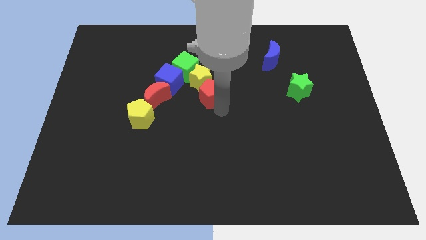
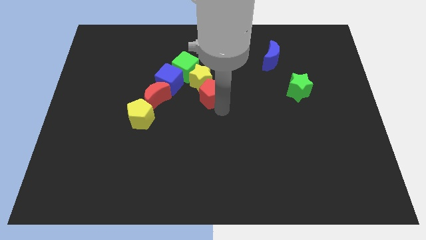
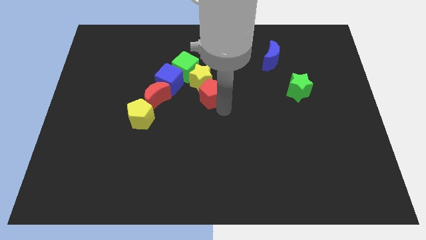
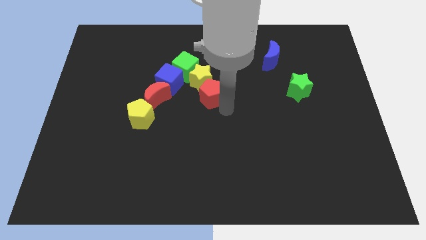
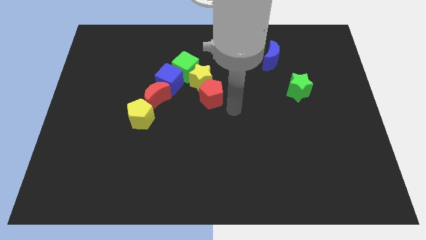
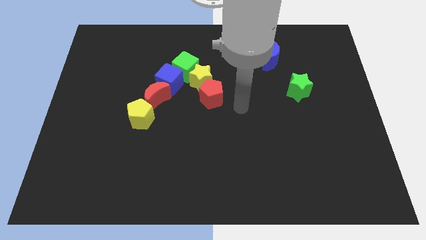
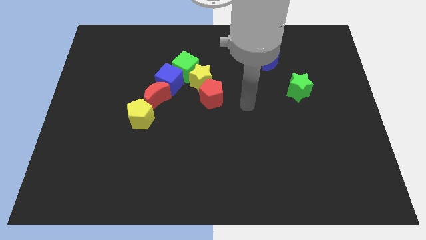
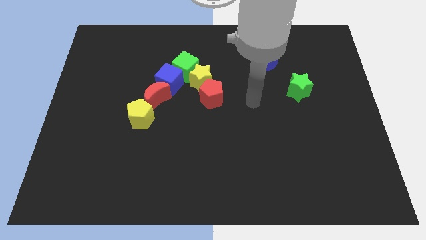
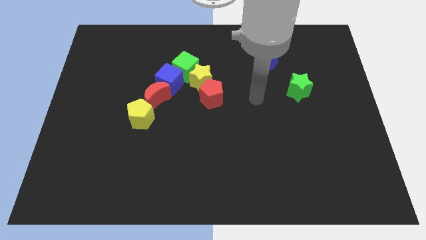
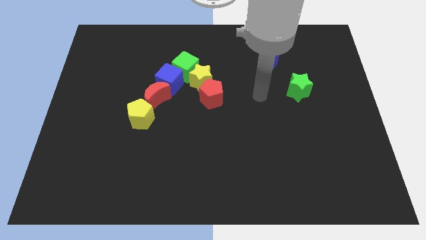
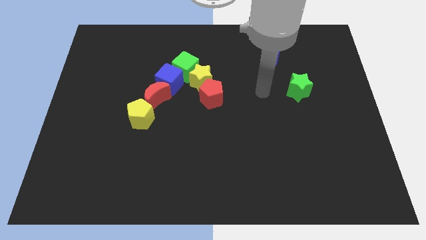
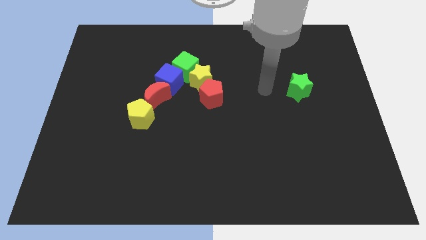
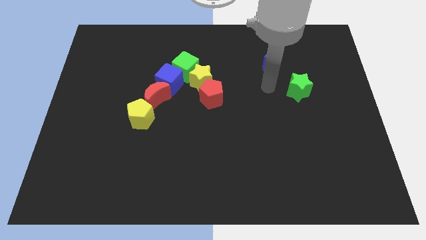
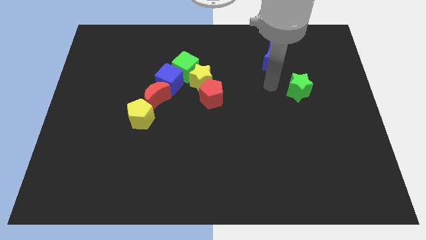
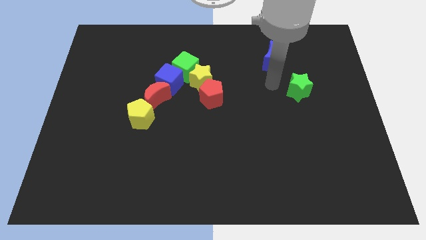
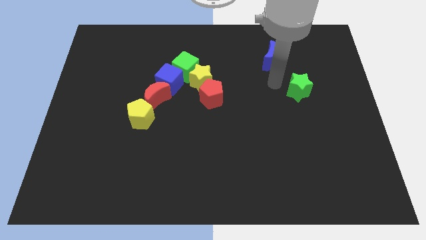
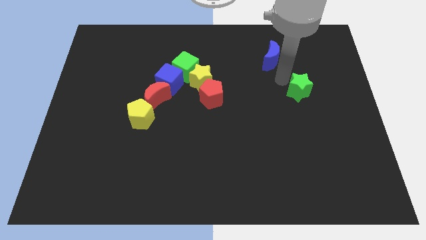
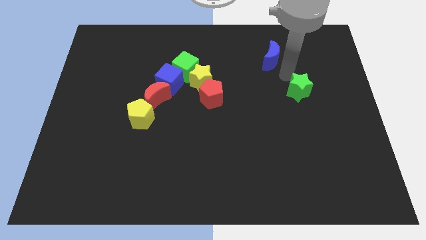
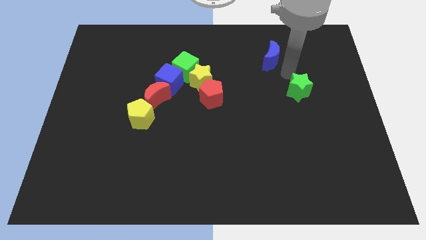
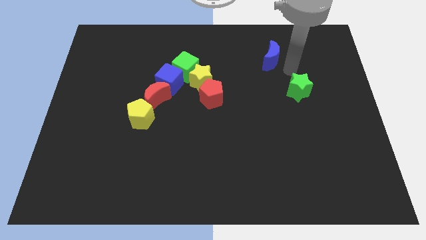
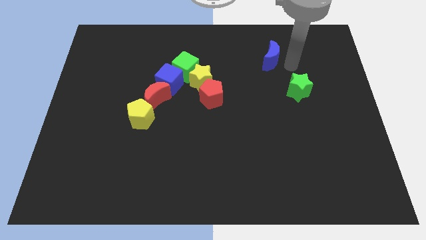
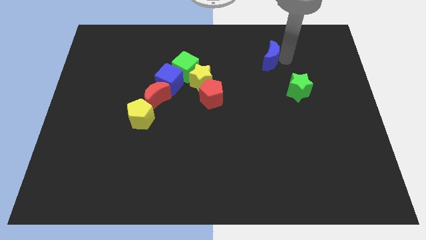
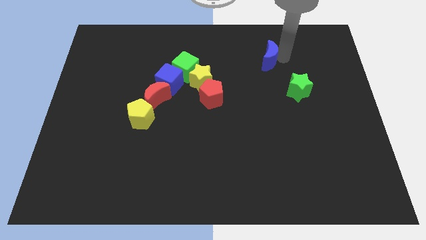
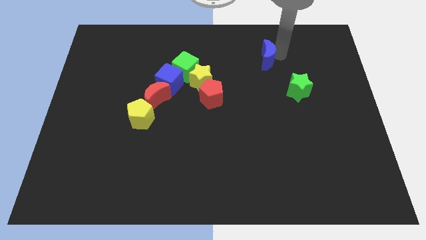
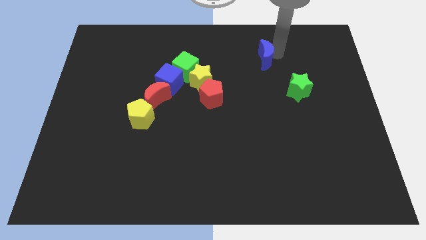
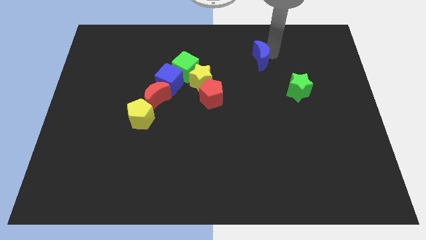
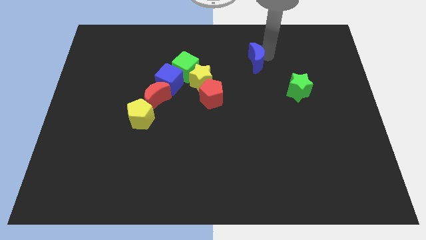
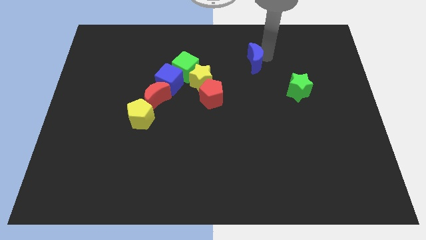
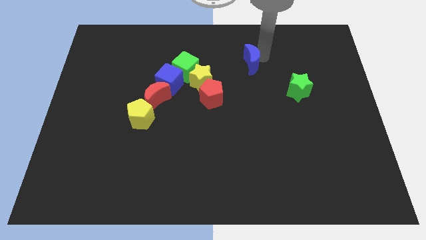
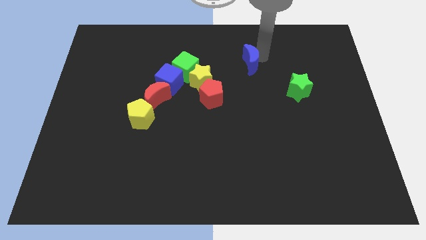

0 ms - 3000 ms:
move the arm right to the blue crescent

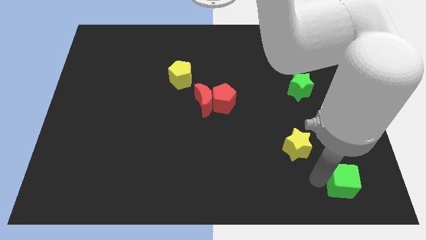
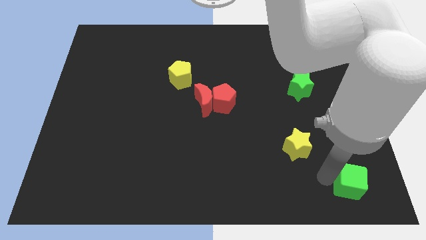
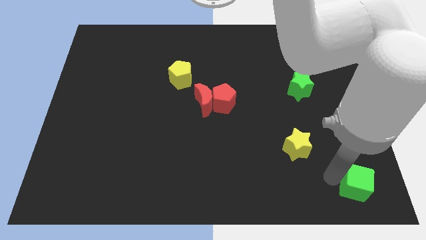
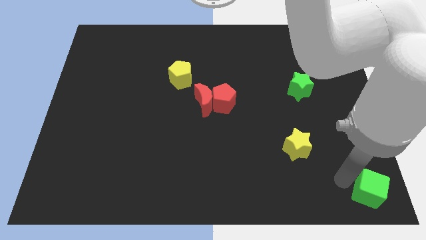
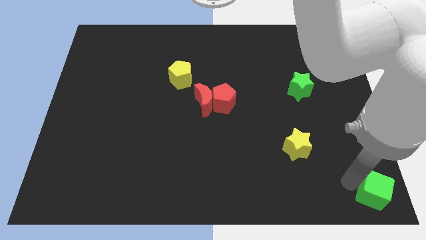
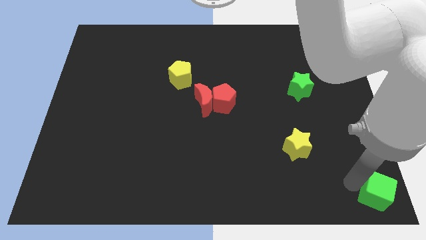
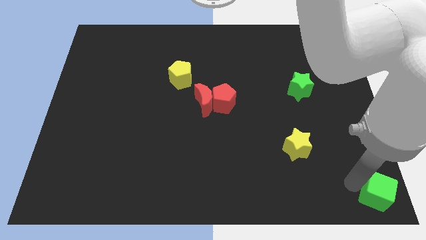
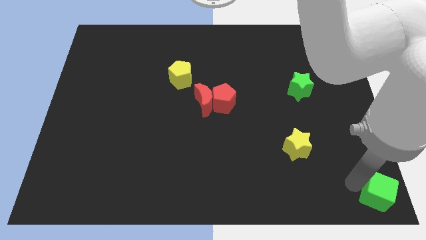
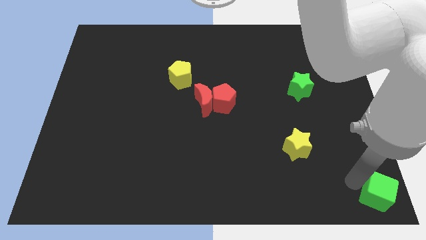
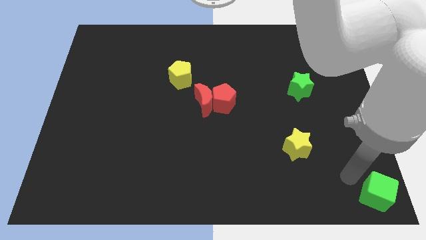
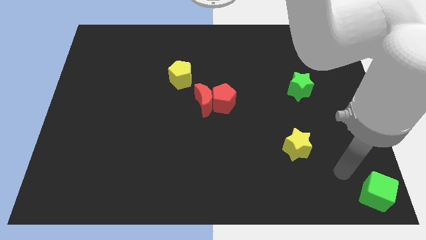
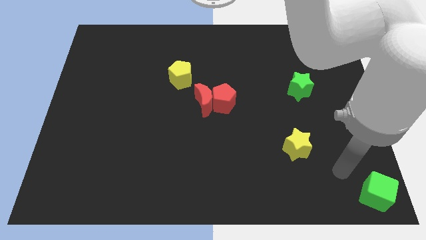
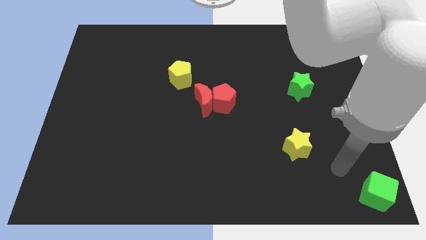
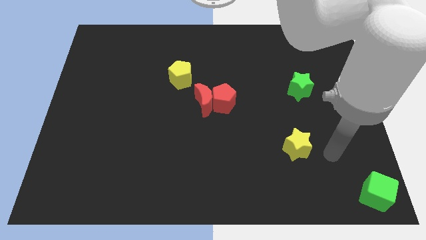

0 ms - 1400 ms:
push the green cube to the bottom right of the board

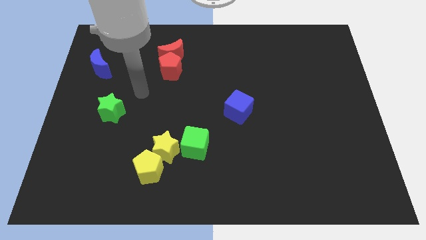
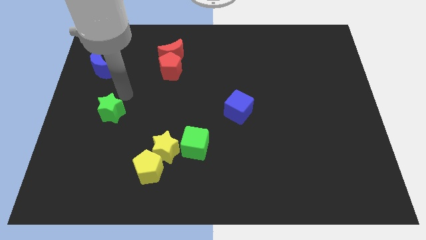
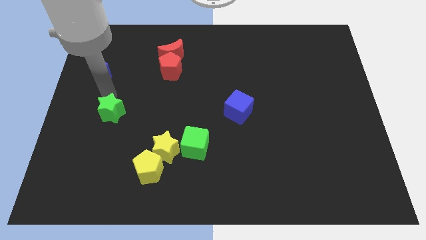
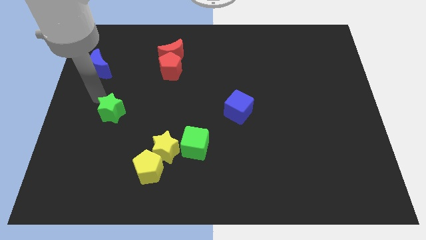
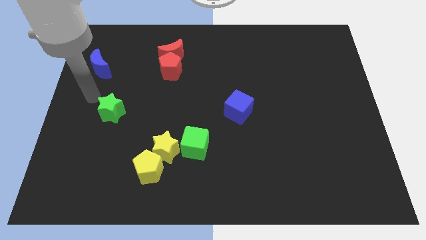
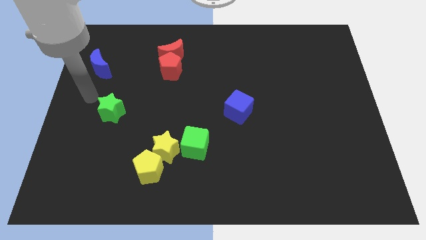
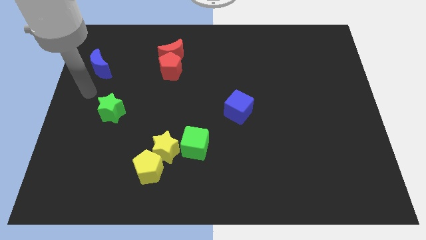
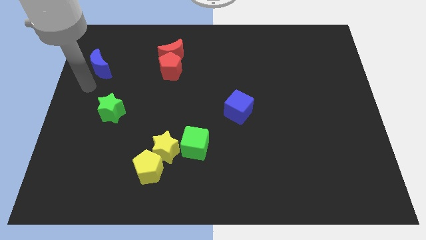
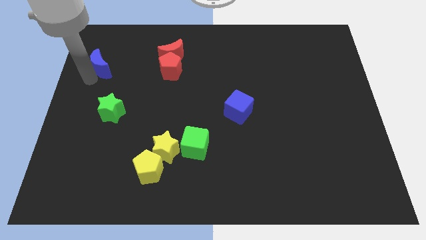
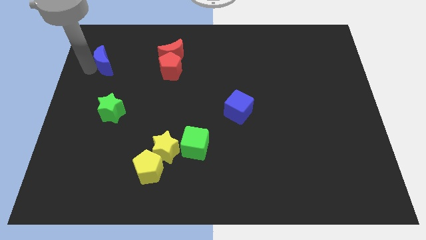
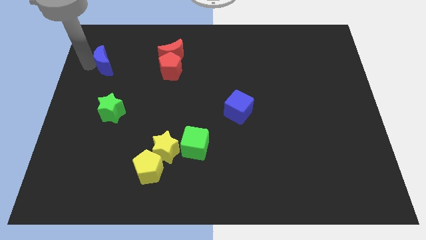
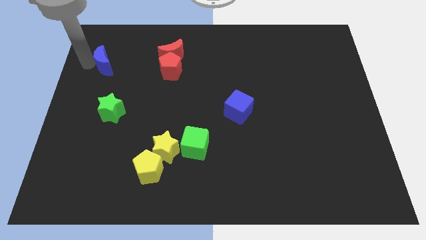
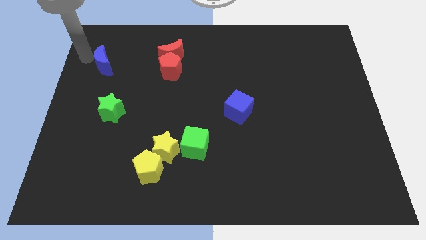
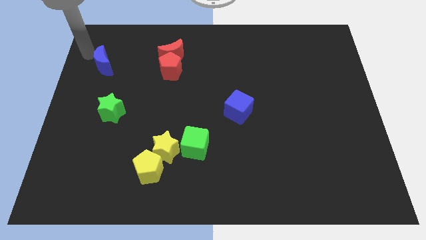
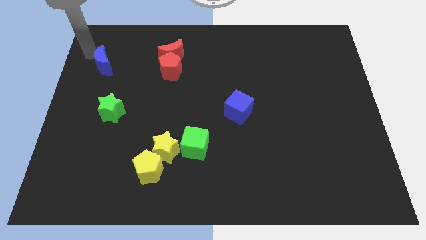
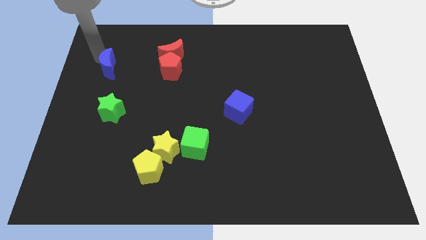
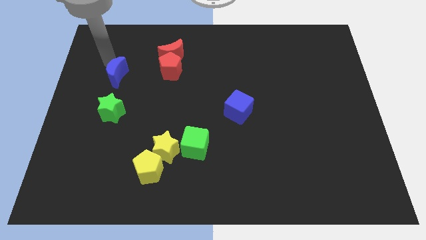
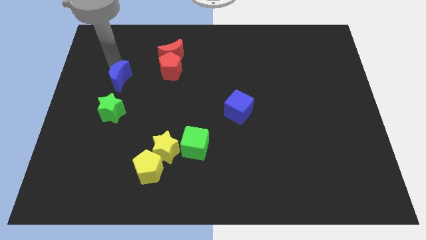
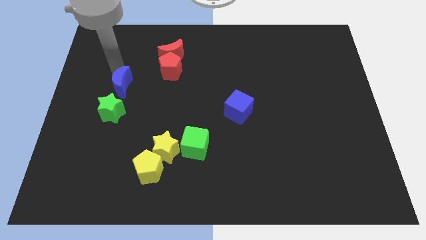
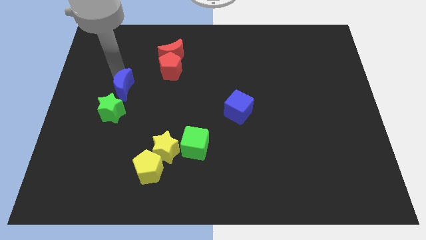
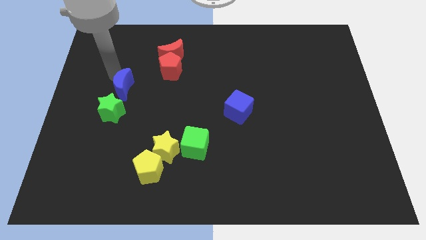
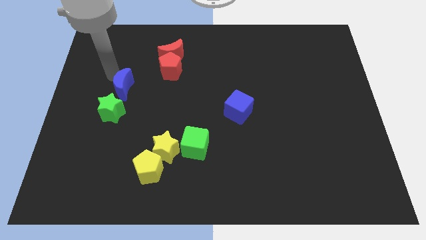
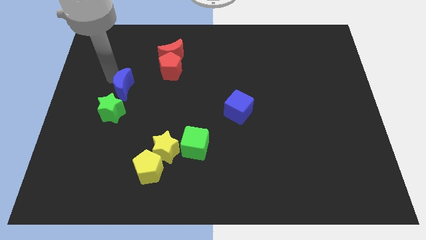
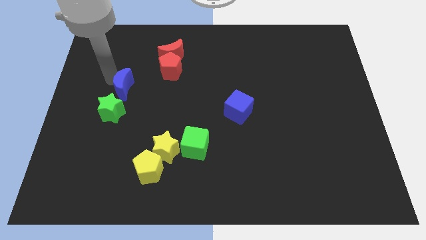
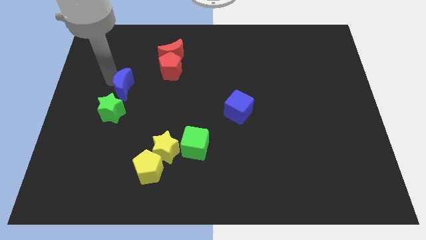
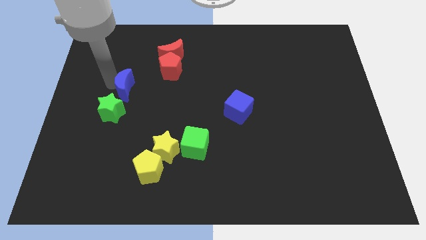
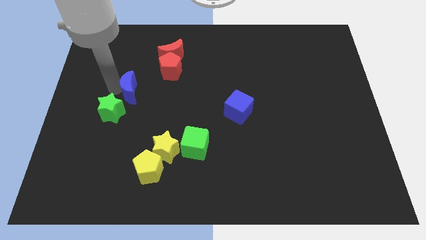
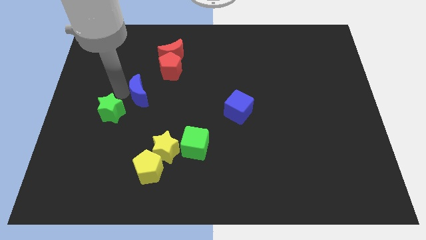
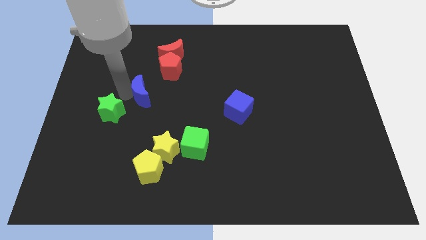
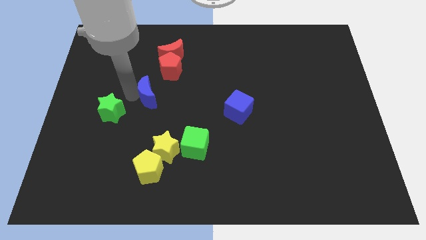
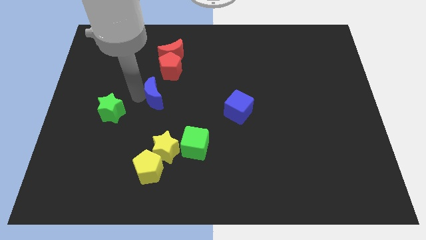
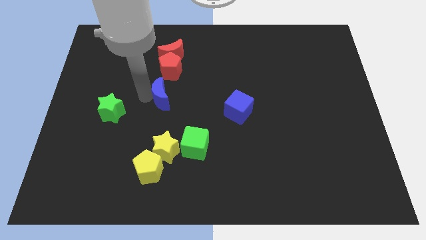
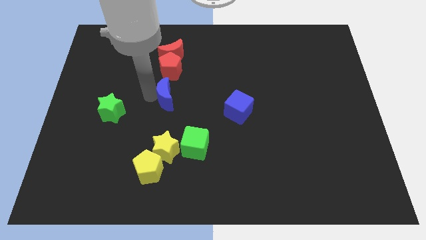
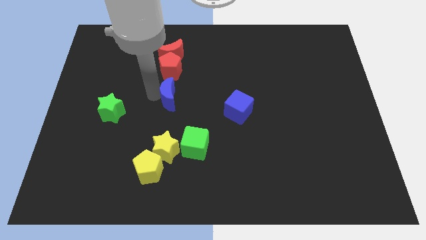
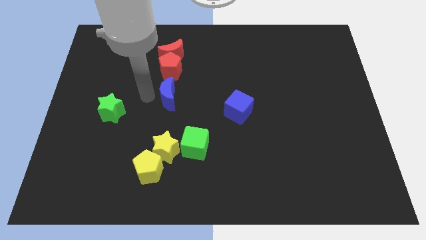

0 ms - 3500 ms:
push the blue moon to the bottom side of the red pentagon

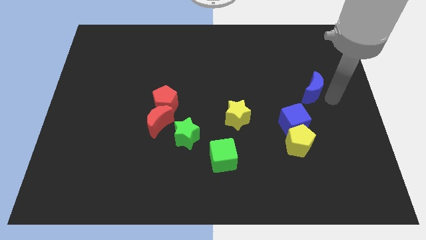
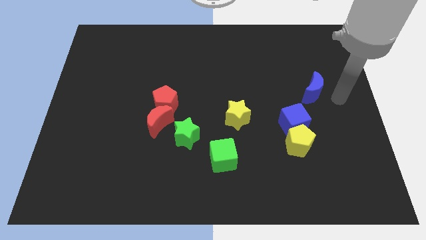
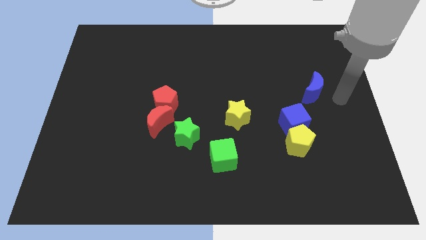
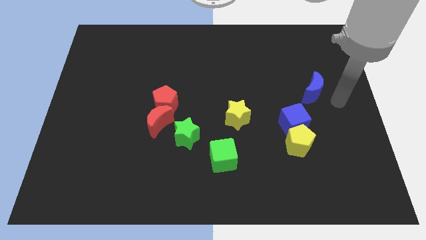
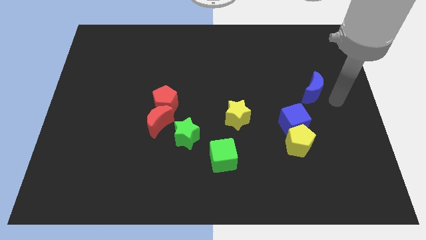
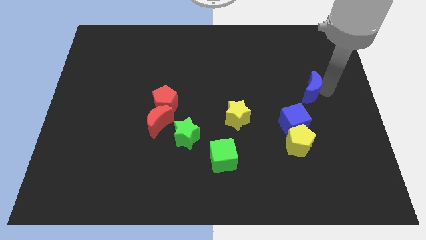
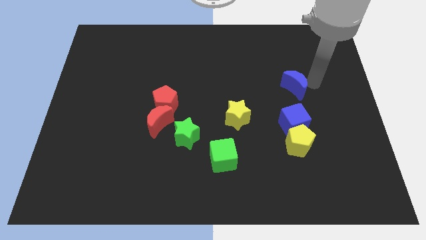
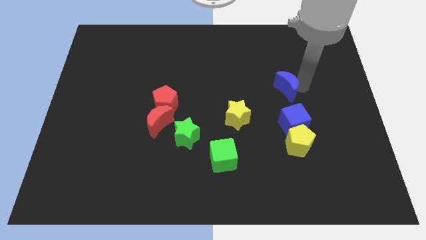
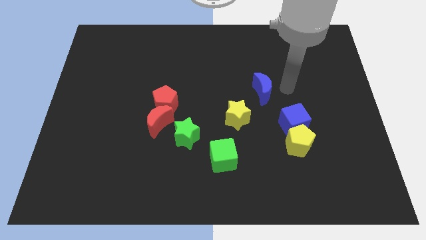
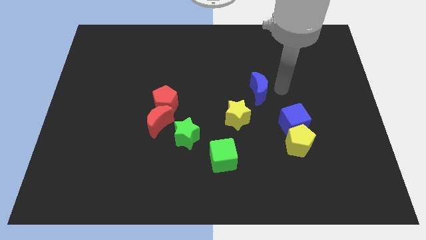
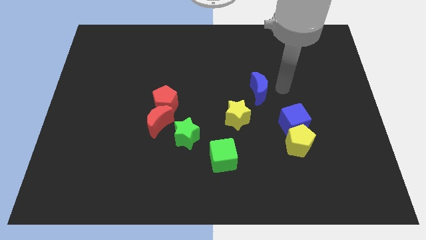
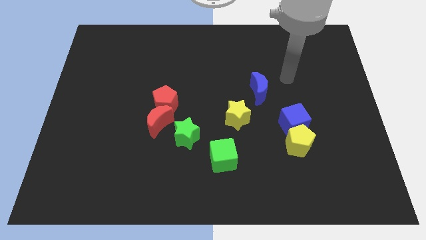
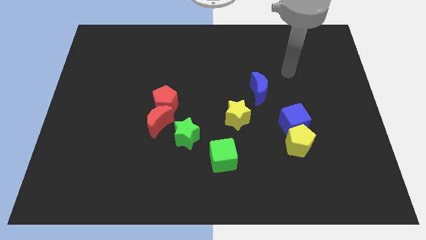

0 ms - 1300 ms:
move the blue crescent close to the yellow star
